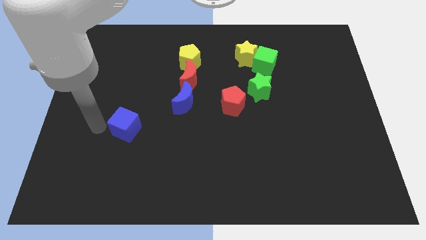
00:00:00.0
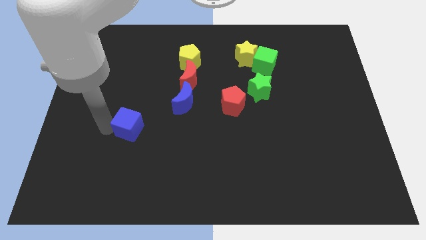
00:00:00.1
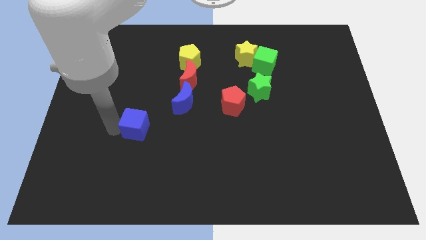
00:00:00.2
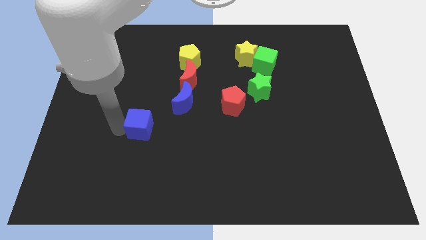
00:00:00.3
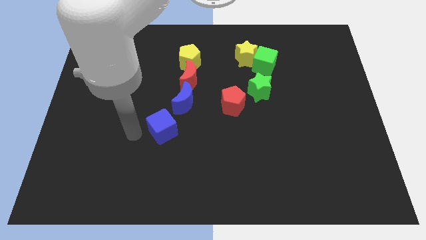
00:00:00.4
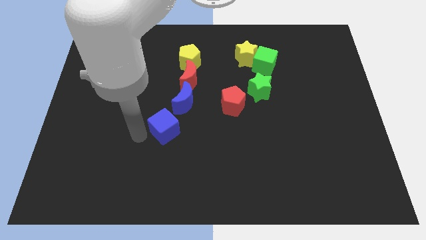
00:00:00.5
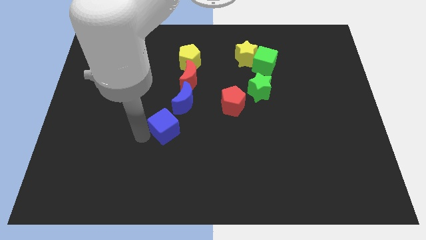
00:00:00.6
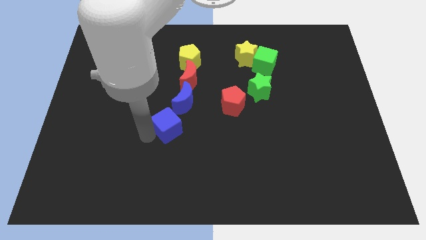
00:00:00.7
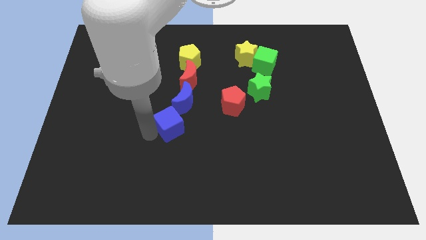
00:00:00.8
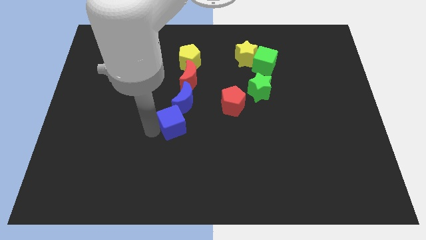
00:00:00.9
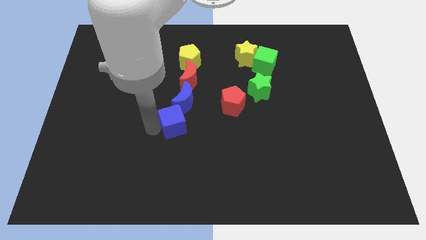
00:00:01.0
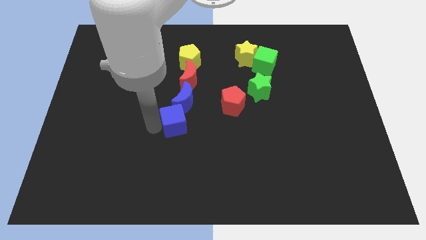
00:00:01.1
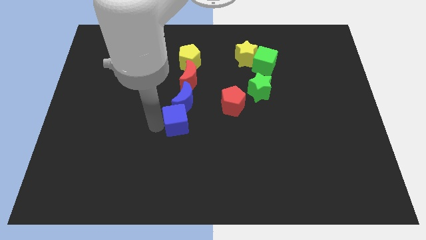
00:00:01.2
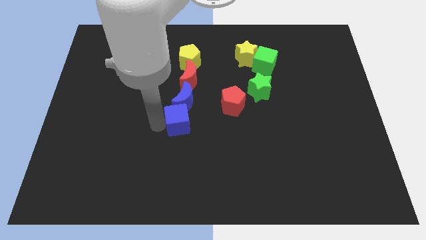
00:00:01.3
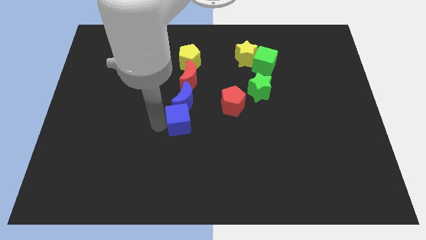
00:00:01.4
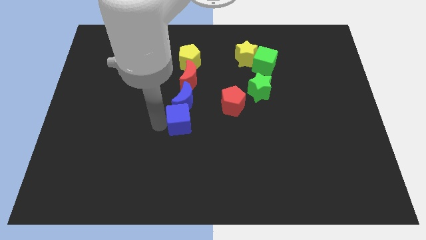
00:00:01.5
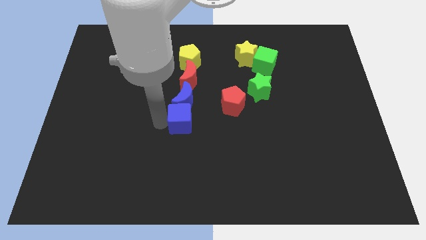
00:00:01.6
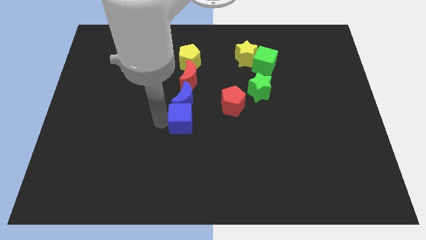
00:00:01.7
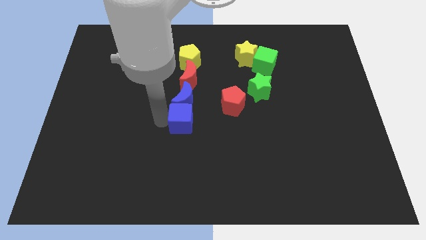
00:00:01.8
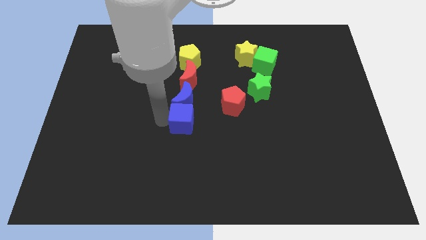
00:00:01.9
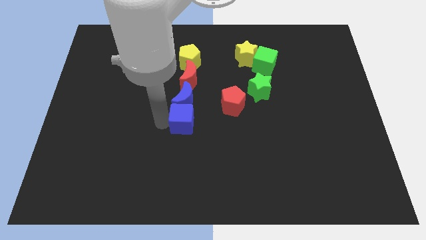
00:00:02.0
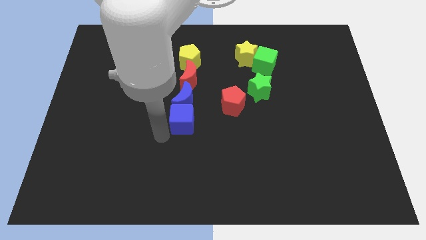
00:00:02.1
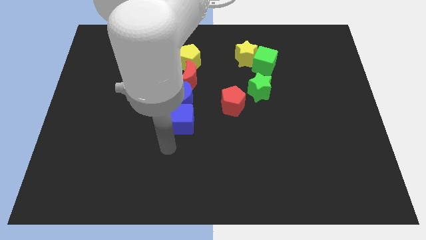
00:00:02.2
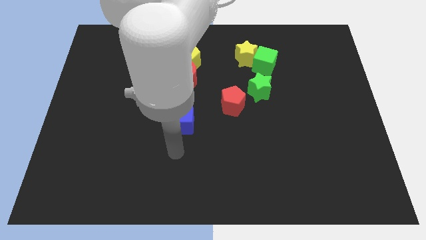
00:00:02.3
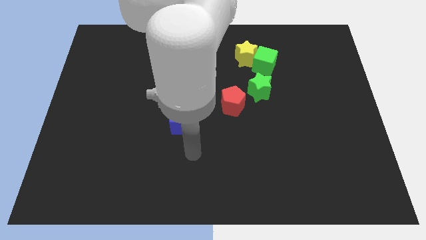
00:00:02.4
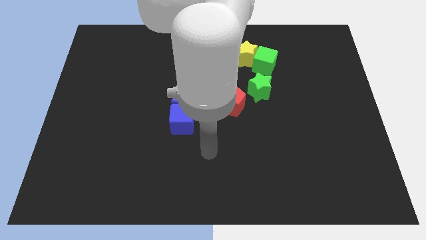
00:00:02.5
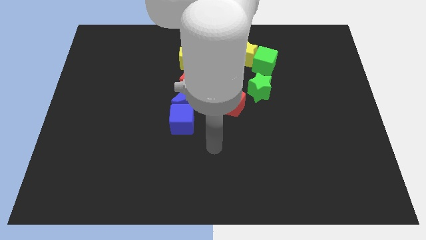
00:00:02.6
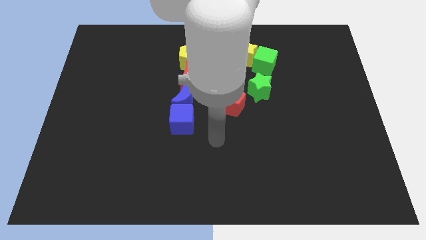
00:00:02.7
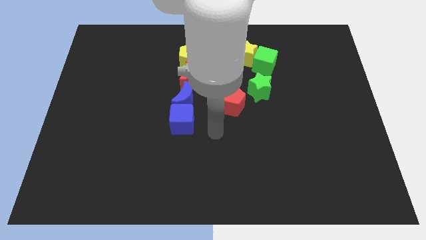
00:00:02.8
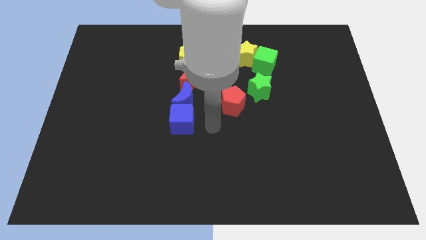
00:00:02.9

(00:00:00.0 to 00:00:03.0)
slide the blue cube below the blue moon

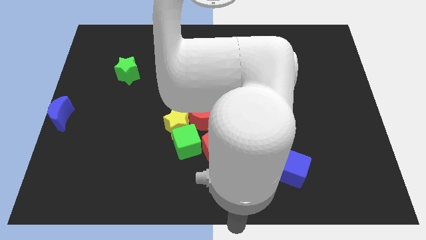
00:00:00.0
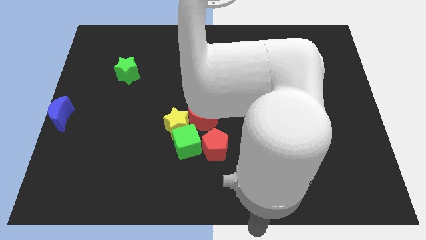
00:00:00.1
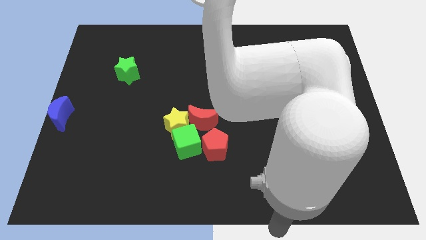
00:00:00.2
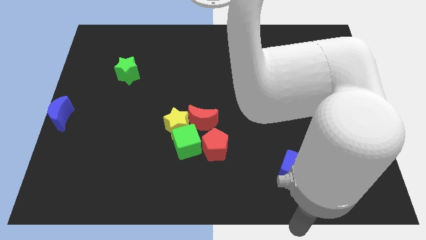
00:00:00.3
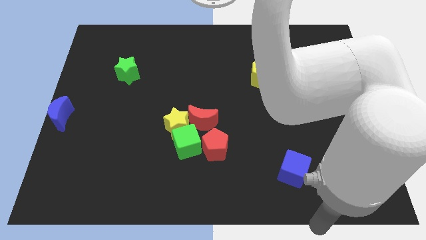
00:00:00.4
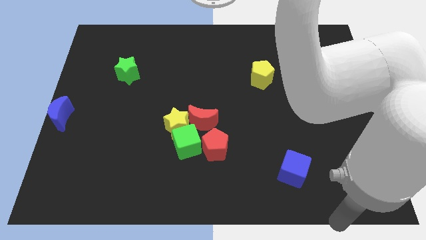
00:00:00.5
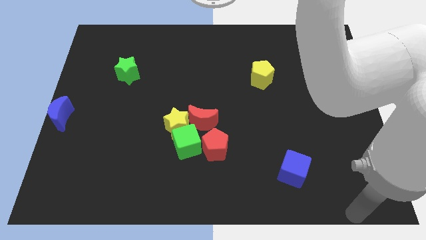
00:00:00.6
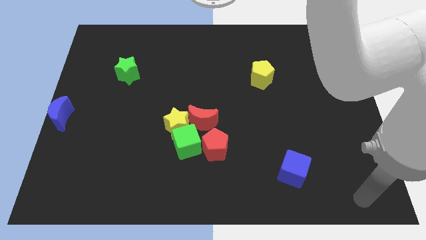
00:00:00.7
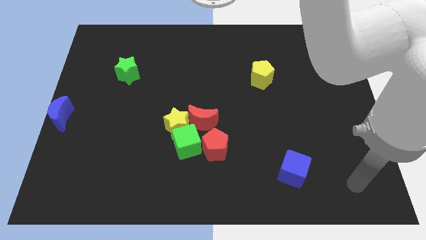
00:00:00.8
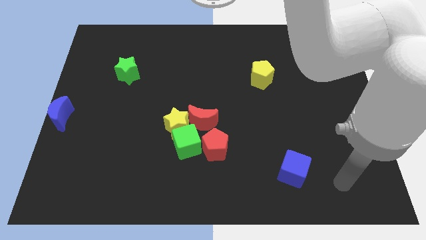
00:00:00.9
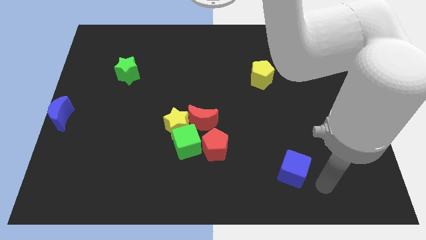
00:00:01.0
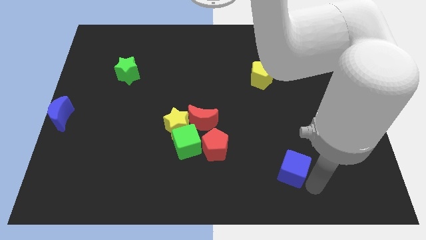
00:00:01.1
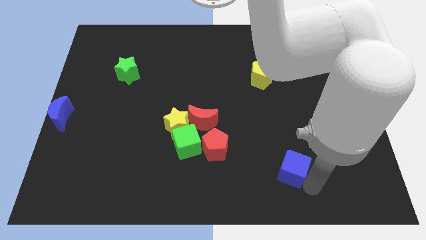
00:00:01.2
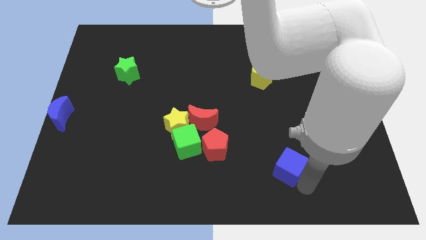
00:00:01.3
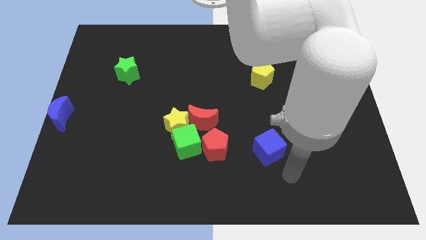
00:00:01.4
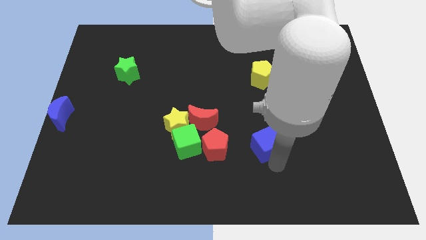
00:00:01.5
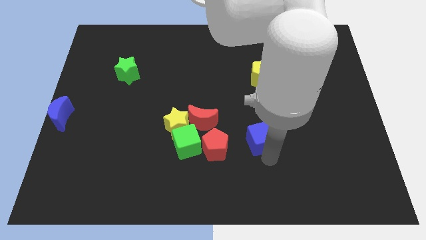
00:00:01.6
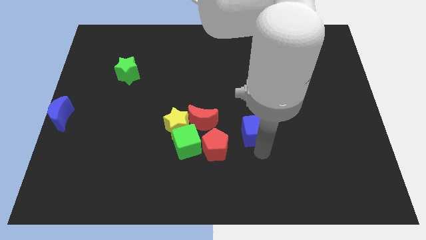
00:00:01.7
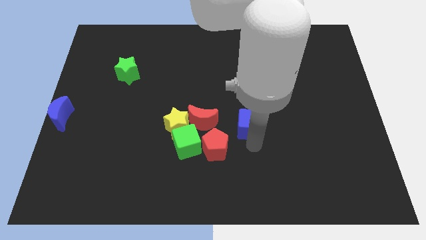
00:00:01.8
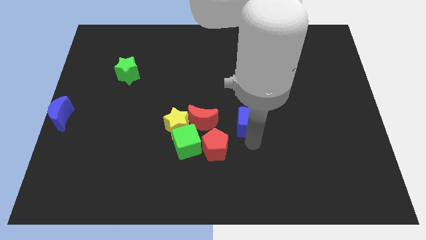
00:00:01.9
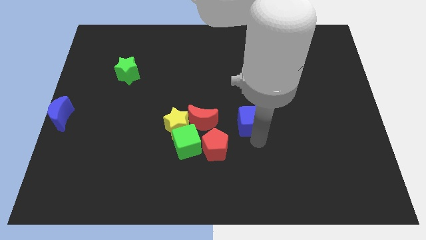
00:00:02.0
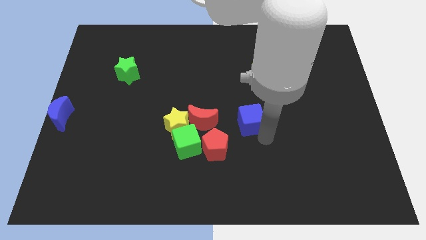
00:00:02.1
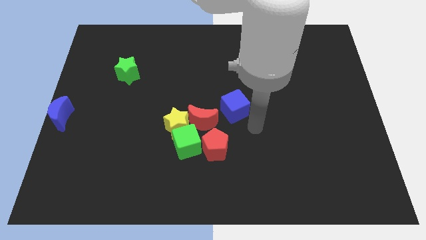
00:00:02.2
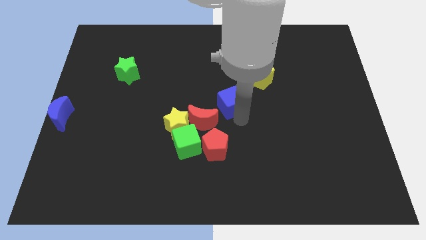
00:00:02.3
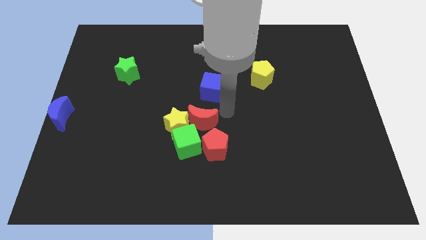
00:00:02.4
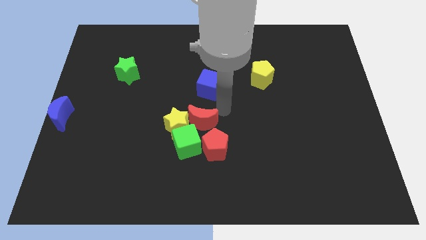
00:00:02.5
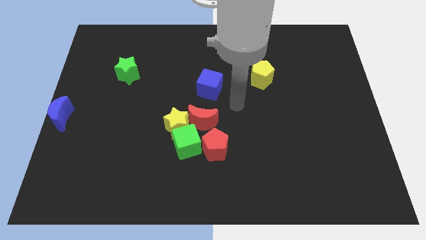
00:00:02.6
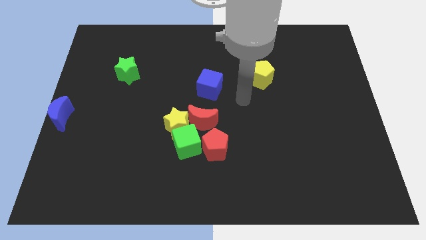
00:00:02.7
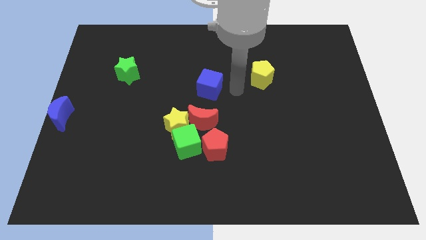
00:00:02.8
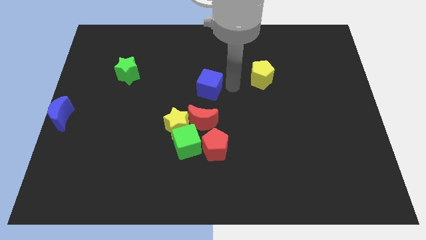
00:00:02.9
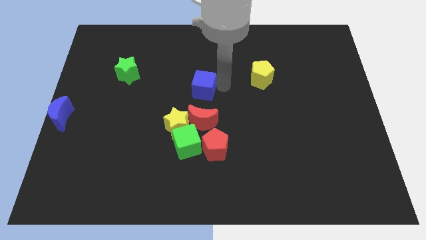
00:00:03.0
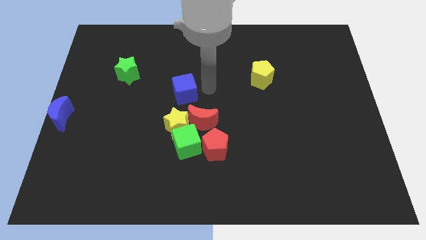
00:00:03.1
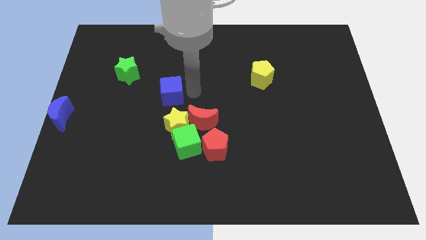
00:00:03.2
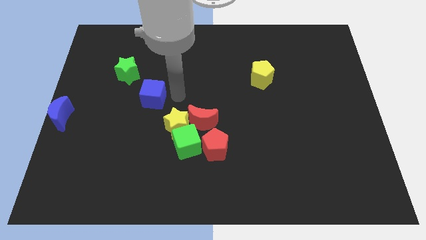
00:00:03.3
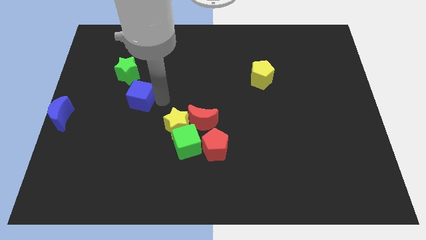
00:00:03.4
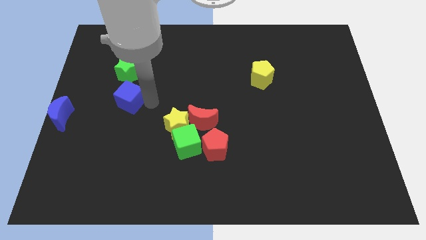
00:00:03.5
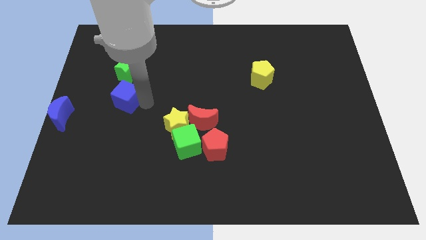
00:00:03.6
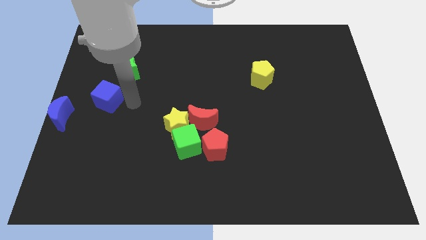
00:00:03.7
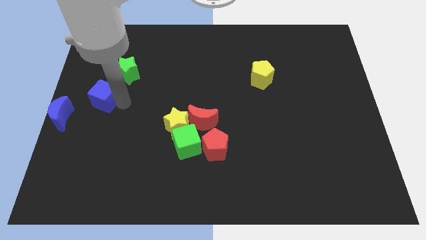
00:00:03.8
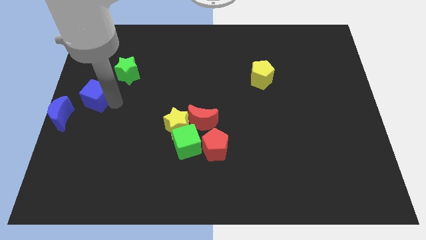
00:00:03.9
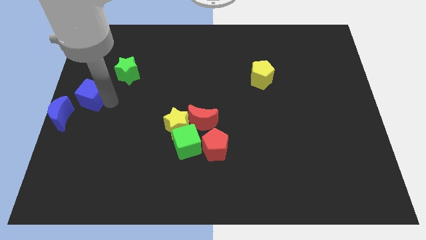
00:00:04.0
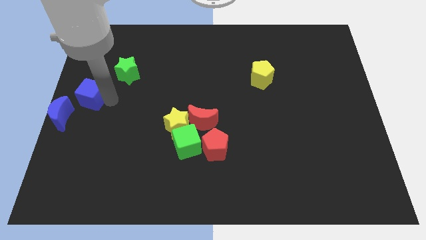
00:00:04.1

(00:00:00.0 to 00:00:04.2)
push blue cube towards blue moon

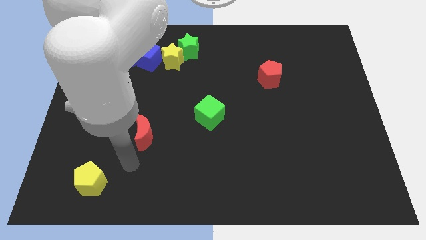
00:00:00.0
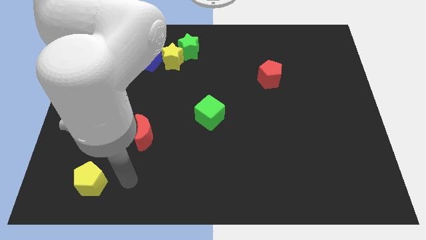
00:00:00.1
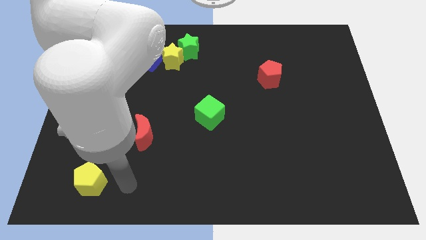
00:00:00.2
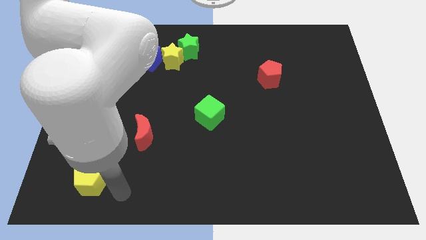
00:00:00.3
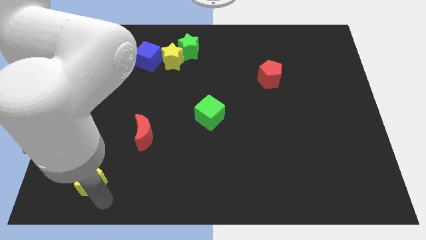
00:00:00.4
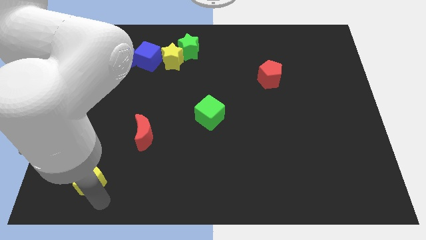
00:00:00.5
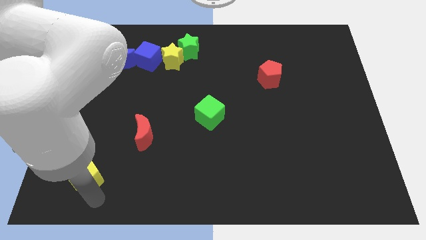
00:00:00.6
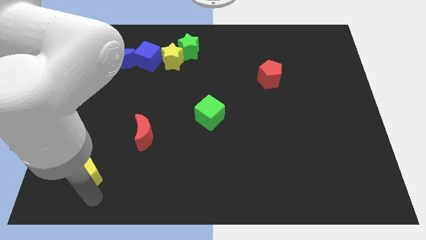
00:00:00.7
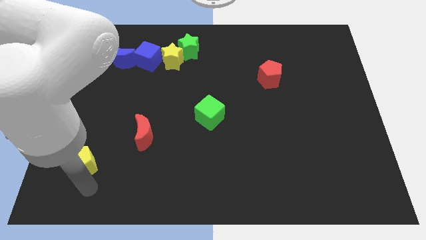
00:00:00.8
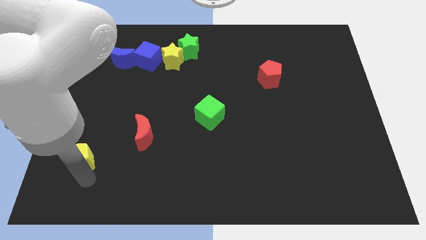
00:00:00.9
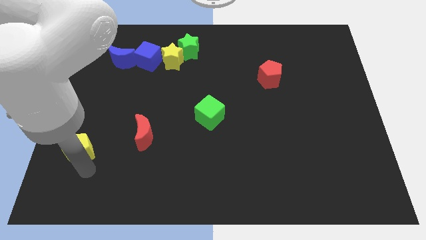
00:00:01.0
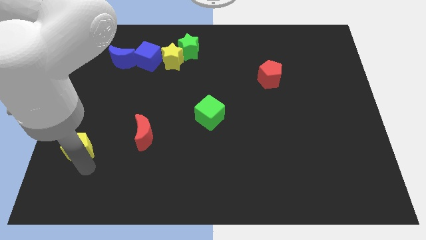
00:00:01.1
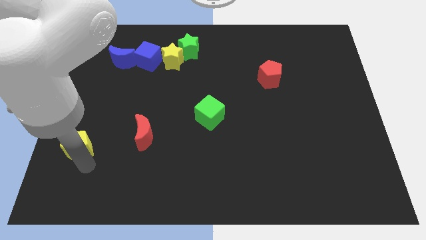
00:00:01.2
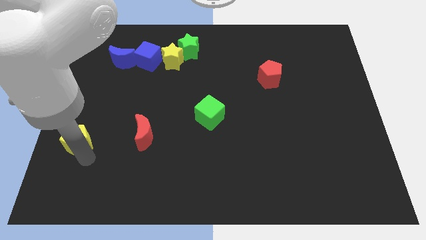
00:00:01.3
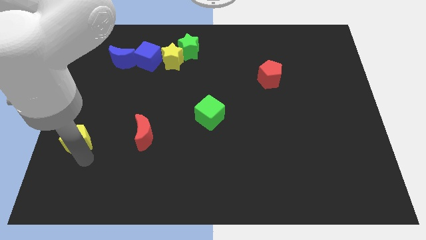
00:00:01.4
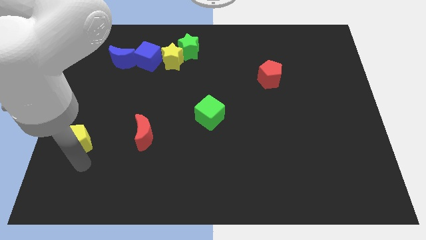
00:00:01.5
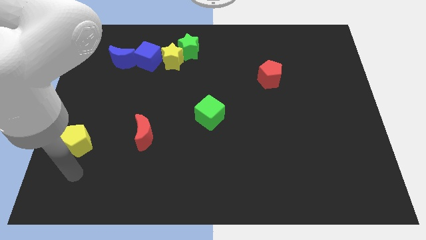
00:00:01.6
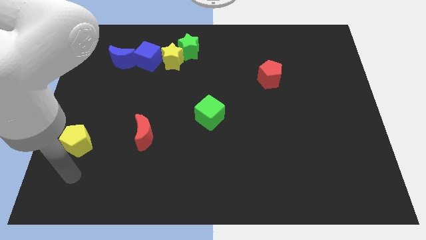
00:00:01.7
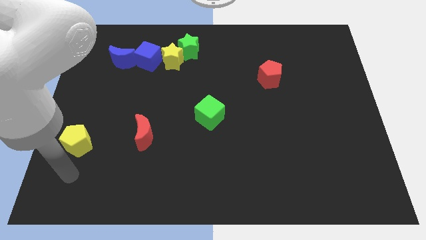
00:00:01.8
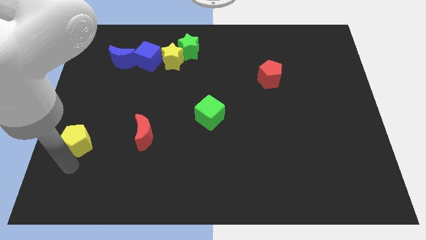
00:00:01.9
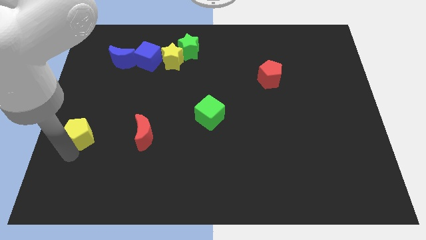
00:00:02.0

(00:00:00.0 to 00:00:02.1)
place the yellow pentagon to the left of the red moon
